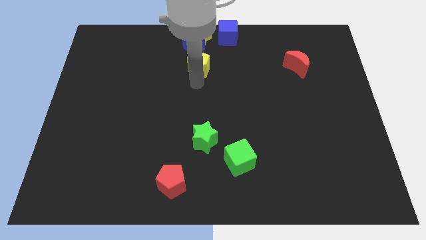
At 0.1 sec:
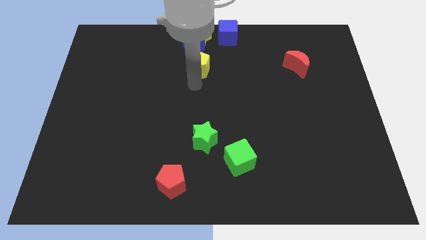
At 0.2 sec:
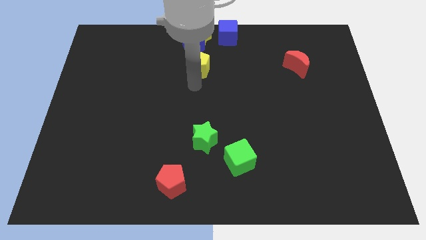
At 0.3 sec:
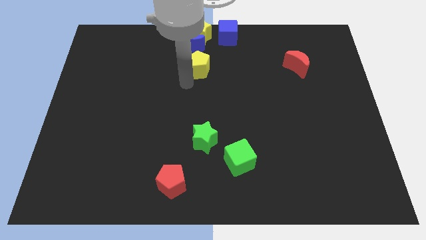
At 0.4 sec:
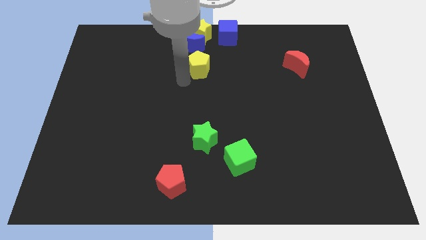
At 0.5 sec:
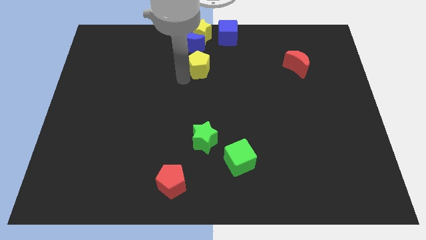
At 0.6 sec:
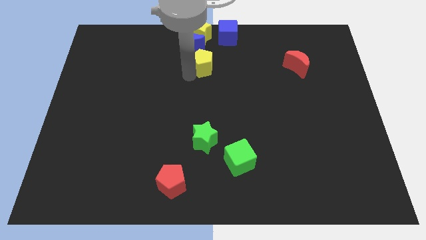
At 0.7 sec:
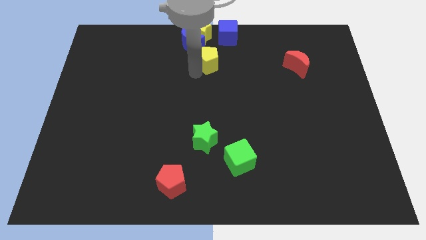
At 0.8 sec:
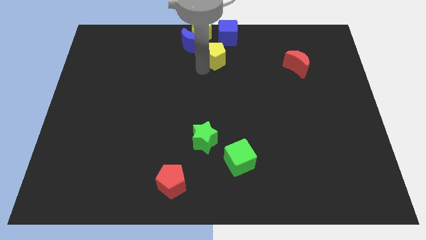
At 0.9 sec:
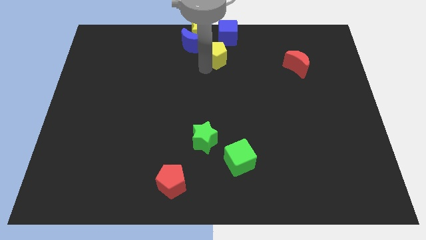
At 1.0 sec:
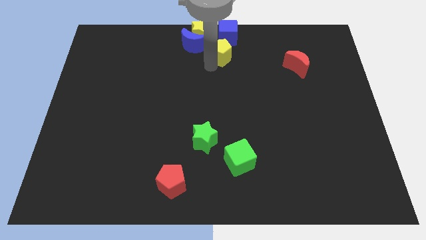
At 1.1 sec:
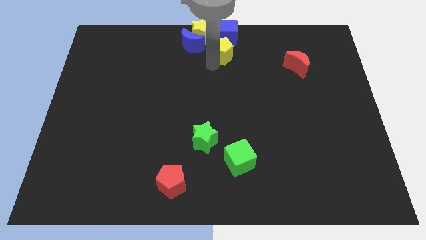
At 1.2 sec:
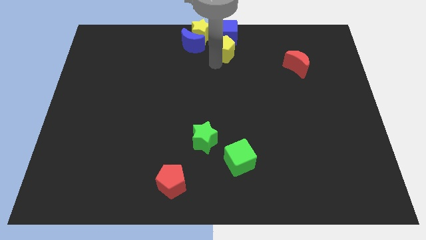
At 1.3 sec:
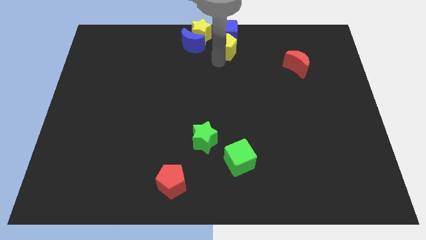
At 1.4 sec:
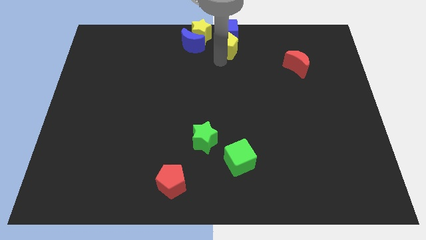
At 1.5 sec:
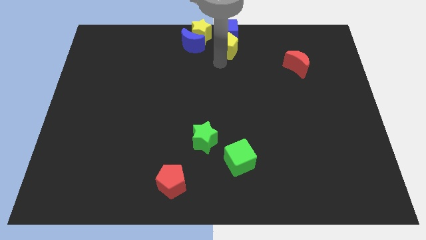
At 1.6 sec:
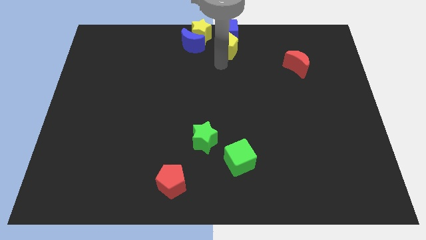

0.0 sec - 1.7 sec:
push the yellow pentagon into the blue cube

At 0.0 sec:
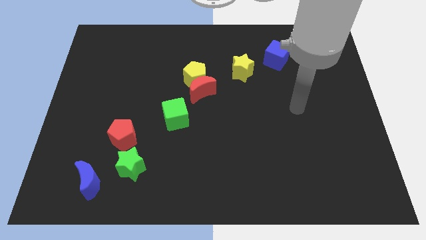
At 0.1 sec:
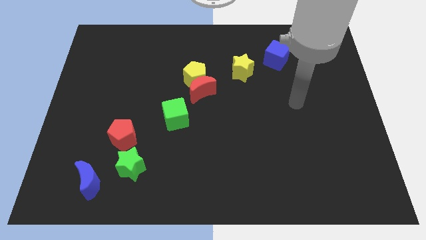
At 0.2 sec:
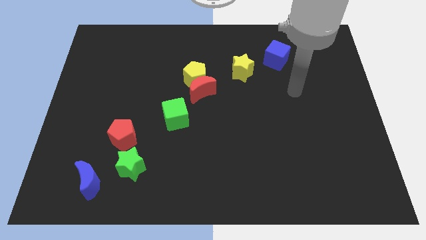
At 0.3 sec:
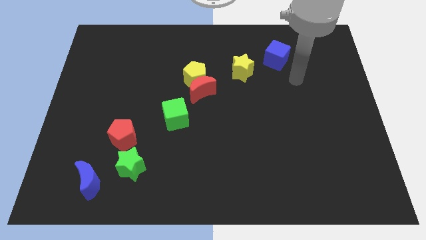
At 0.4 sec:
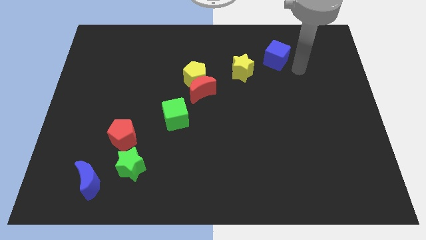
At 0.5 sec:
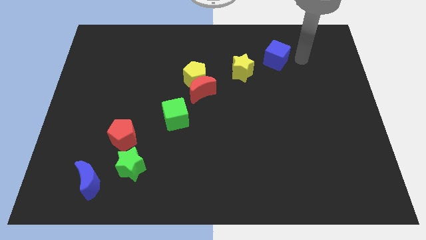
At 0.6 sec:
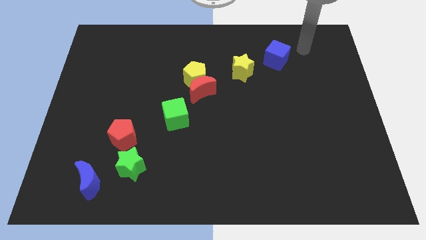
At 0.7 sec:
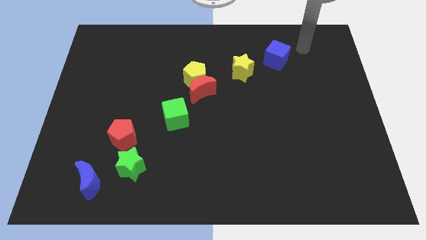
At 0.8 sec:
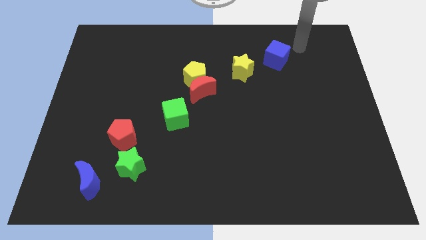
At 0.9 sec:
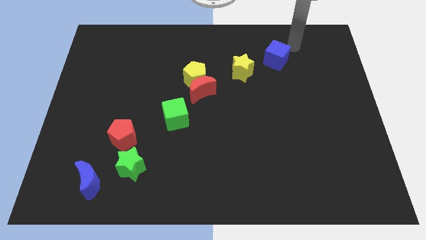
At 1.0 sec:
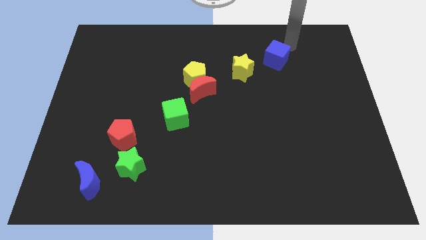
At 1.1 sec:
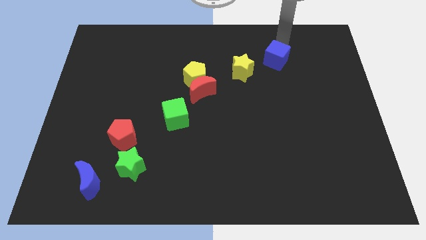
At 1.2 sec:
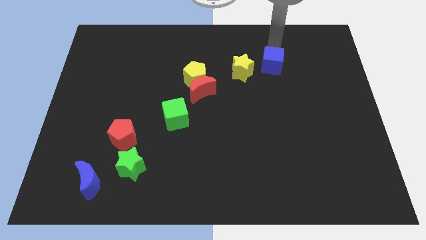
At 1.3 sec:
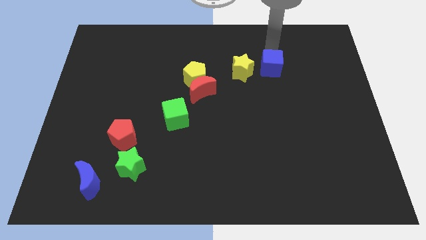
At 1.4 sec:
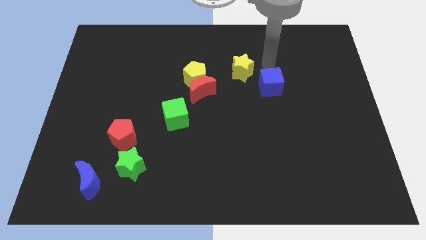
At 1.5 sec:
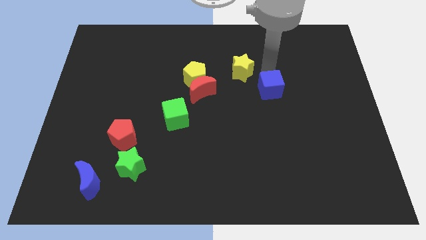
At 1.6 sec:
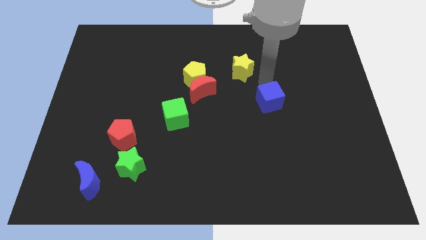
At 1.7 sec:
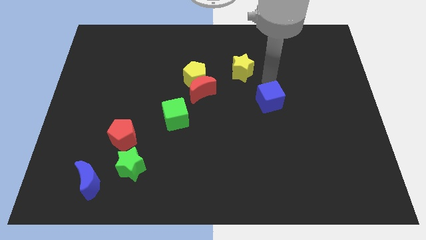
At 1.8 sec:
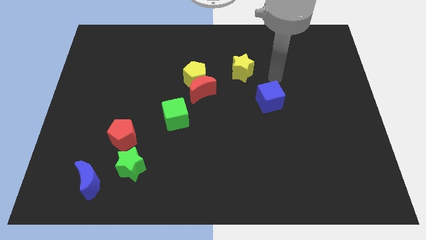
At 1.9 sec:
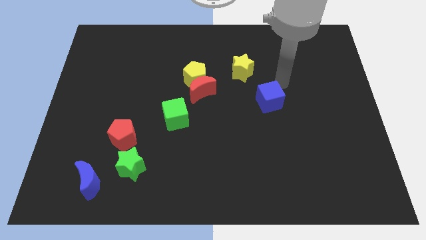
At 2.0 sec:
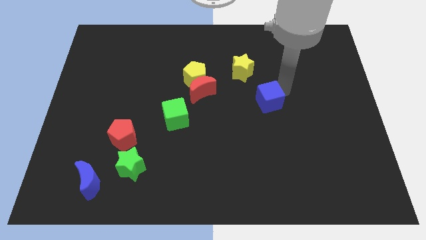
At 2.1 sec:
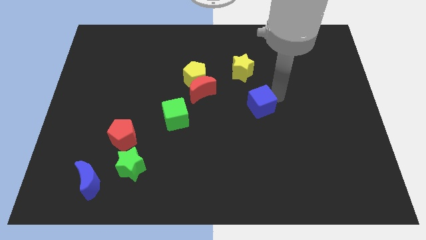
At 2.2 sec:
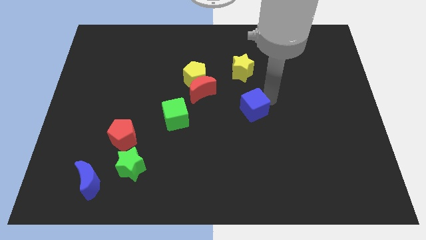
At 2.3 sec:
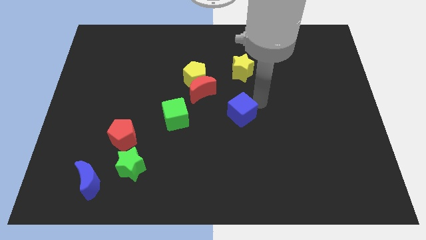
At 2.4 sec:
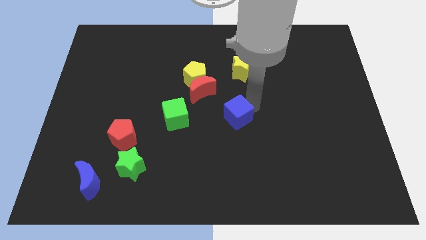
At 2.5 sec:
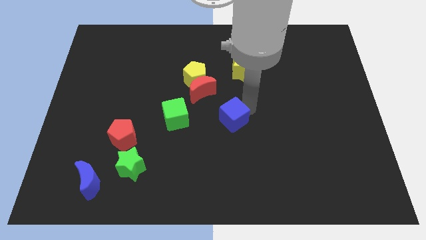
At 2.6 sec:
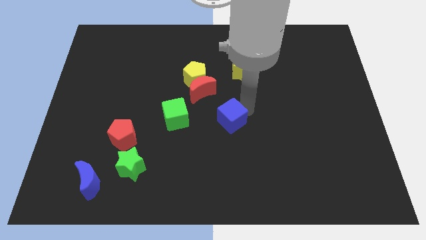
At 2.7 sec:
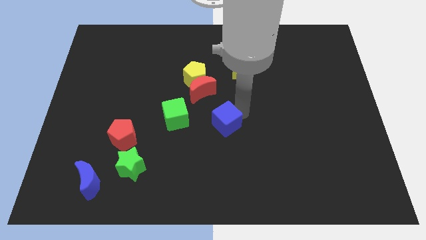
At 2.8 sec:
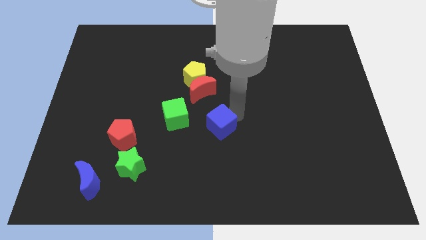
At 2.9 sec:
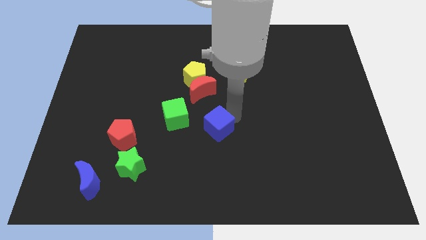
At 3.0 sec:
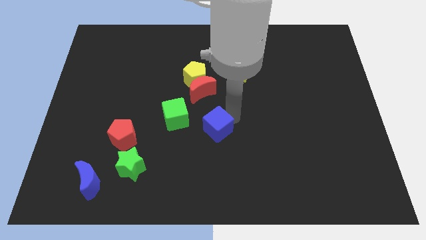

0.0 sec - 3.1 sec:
push the blue cube to the right of the green cube

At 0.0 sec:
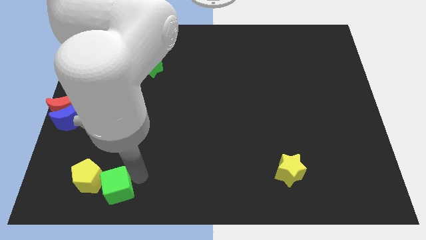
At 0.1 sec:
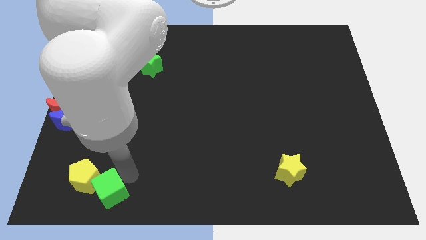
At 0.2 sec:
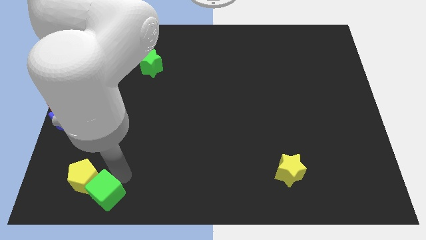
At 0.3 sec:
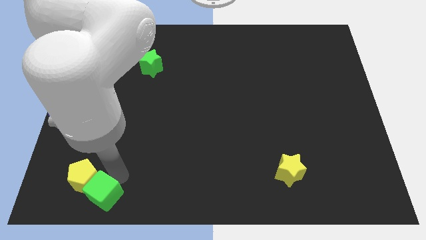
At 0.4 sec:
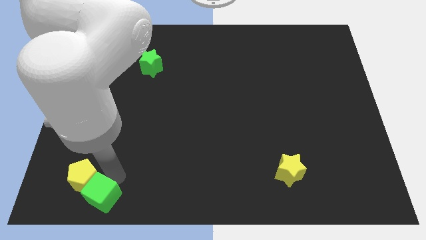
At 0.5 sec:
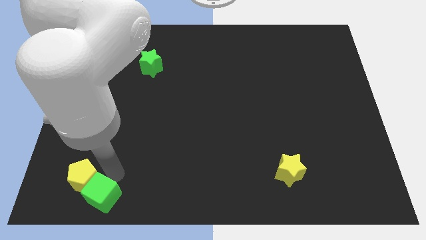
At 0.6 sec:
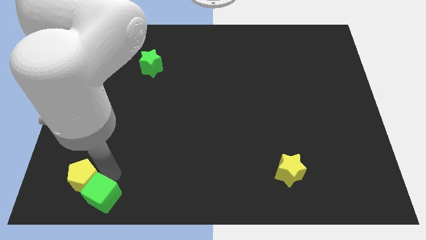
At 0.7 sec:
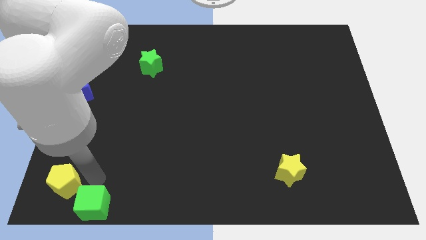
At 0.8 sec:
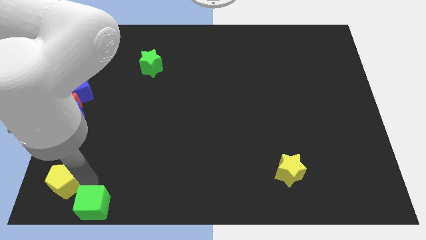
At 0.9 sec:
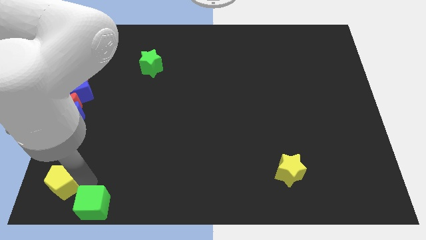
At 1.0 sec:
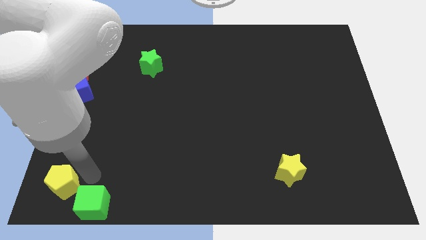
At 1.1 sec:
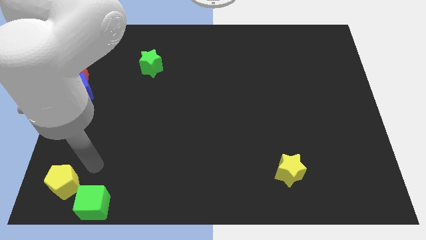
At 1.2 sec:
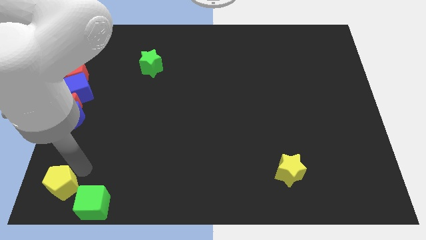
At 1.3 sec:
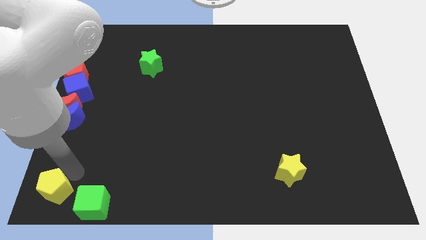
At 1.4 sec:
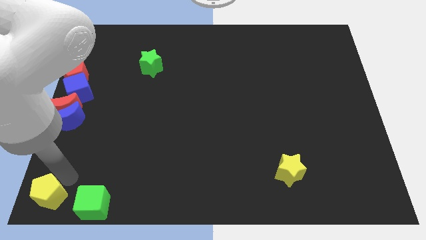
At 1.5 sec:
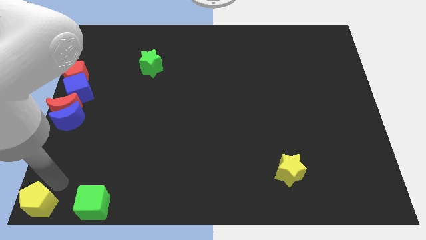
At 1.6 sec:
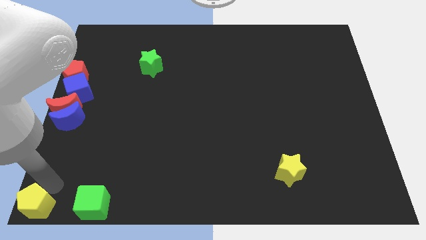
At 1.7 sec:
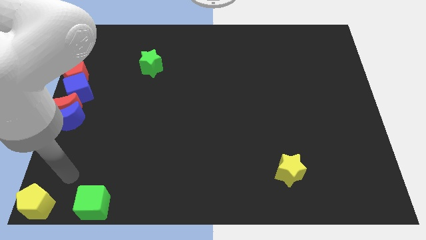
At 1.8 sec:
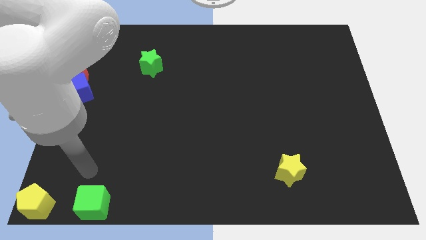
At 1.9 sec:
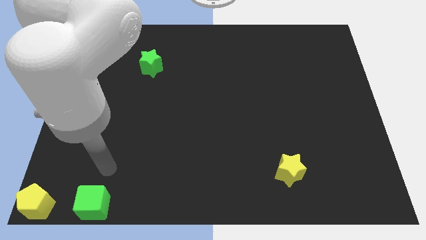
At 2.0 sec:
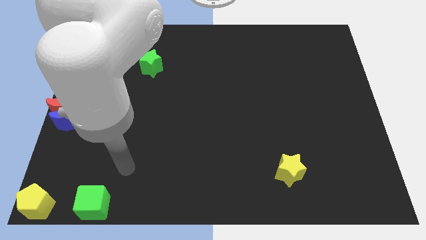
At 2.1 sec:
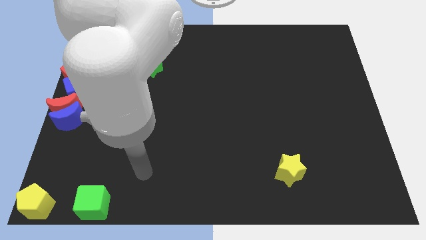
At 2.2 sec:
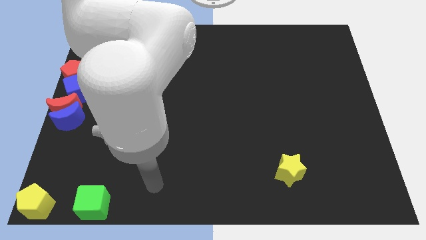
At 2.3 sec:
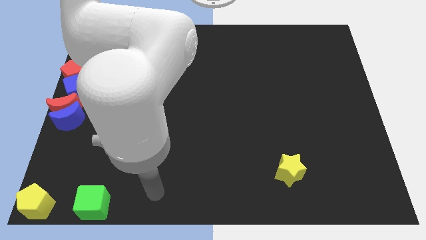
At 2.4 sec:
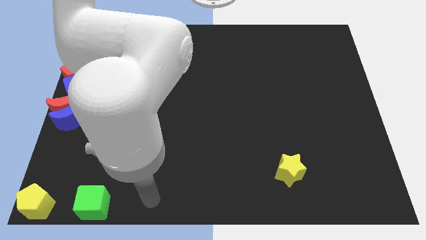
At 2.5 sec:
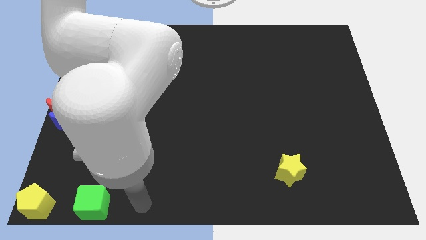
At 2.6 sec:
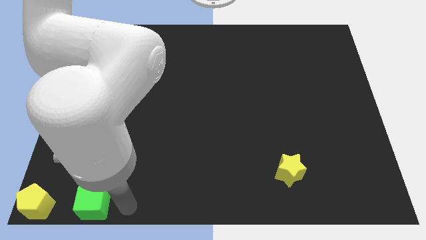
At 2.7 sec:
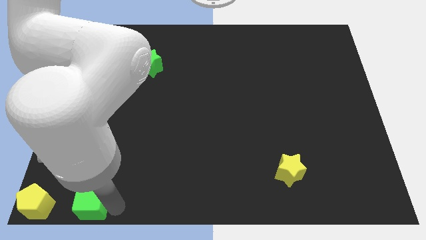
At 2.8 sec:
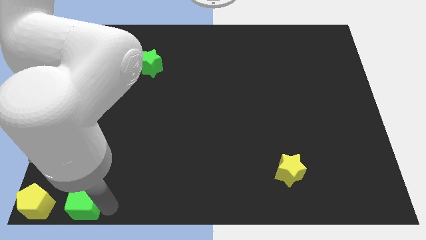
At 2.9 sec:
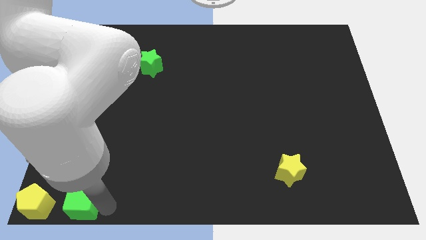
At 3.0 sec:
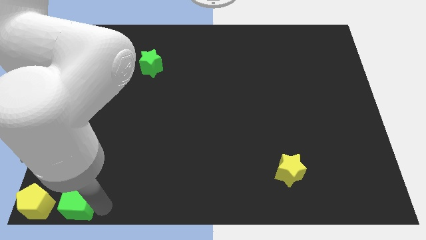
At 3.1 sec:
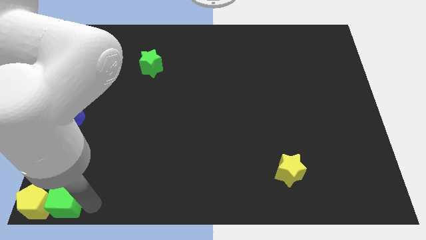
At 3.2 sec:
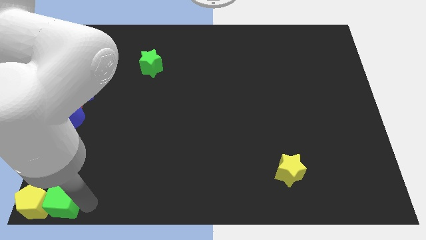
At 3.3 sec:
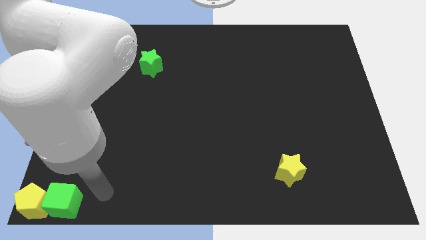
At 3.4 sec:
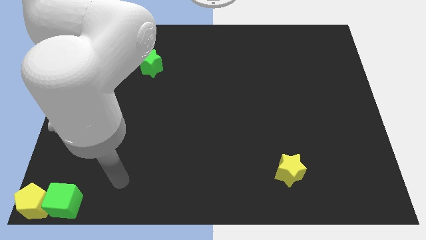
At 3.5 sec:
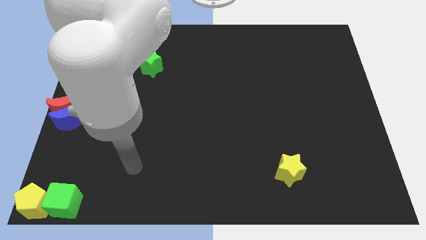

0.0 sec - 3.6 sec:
push the green cube and yellow pentagon at the bottom left corner of the board

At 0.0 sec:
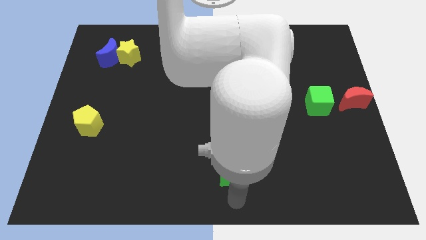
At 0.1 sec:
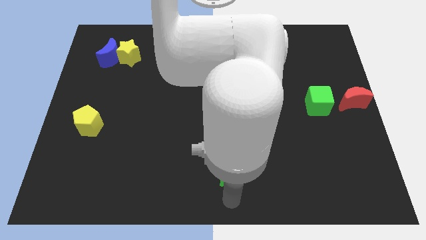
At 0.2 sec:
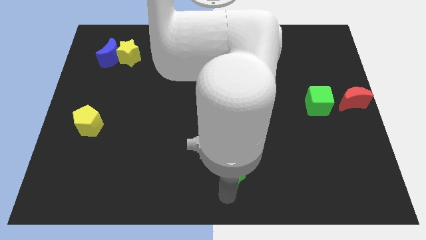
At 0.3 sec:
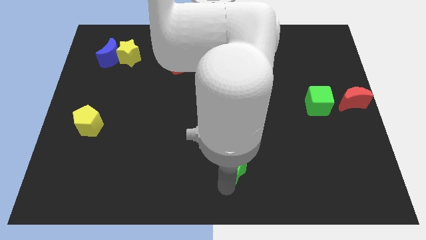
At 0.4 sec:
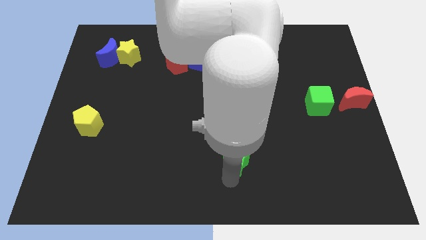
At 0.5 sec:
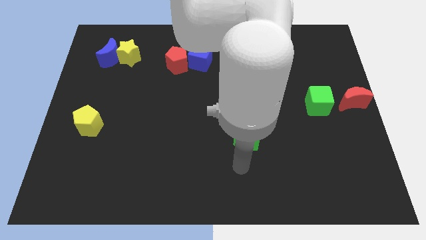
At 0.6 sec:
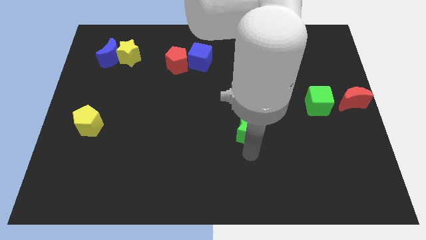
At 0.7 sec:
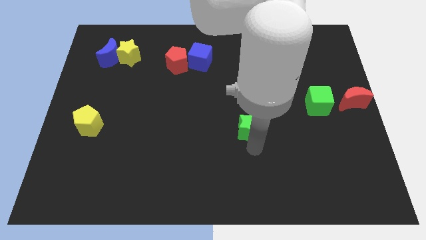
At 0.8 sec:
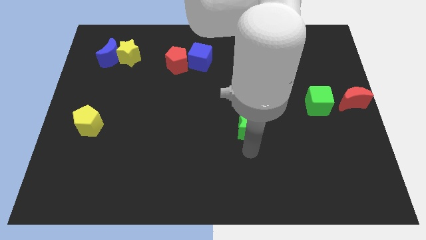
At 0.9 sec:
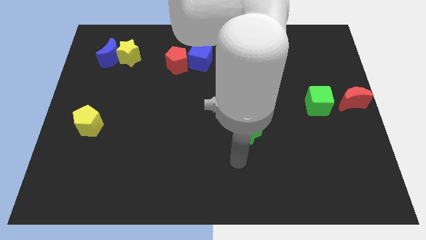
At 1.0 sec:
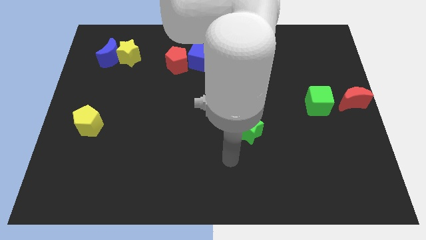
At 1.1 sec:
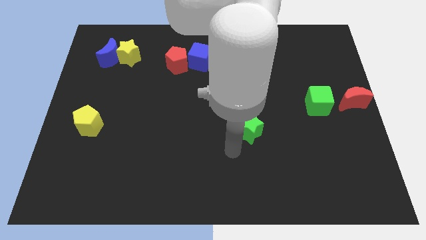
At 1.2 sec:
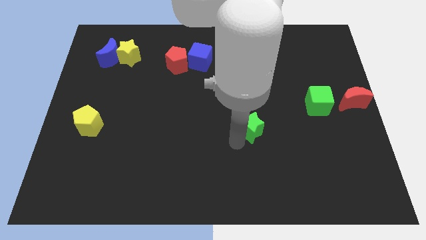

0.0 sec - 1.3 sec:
move the green star up slightly
